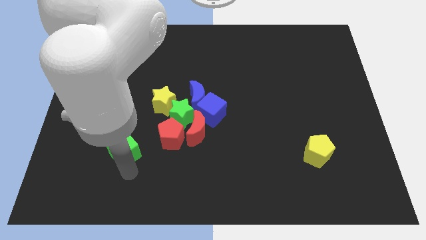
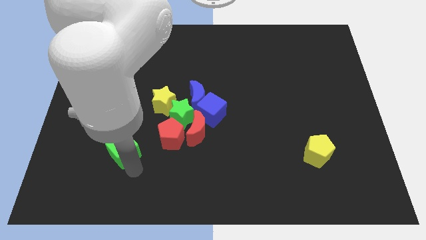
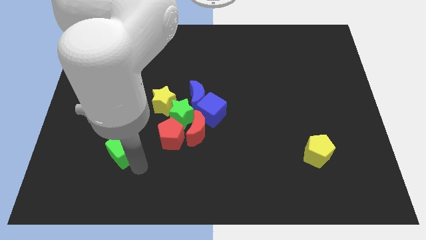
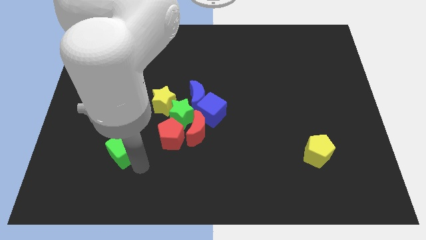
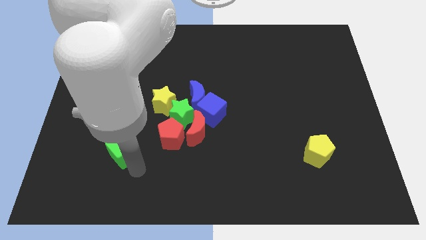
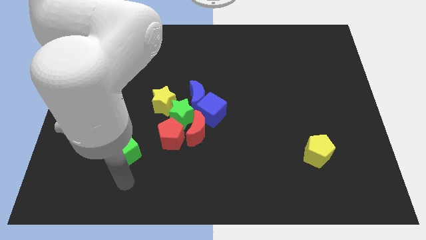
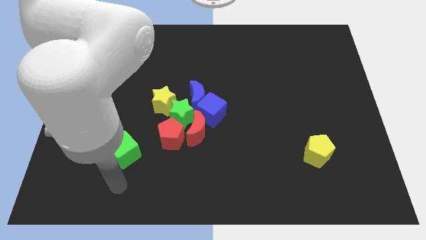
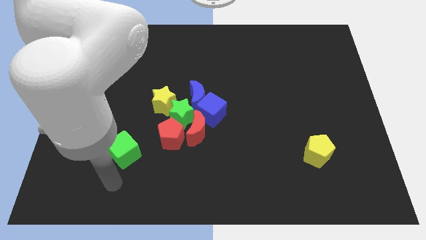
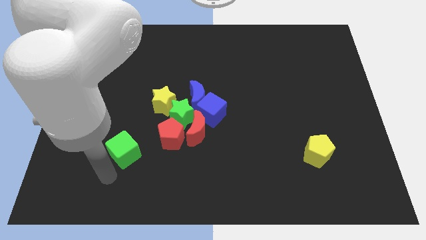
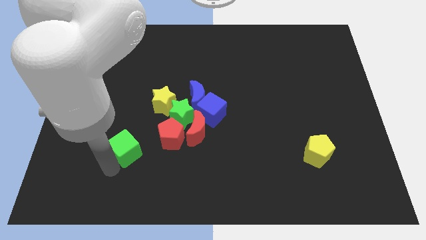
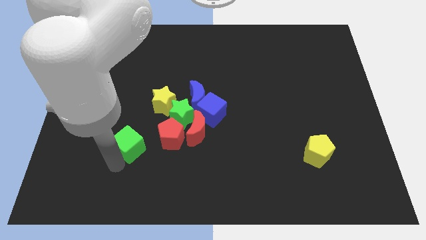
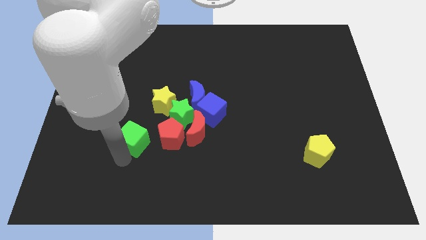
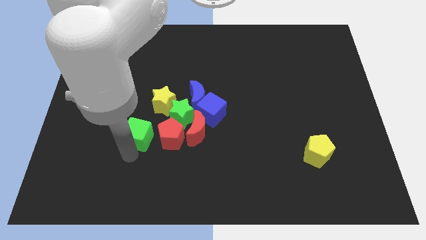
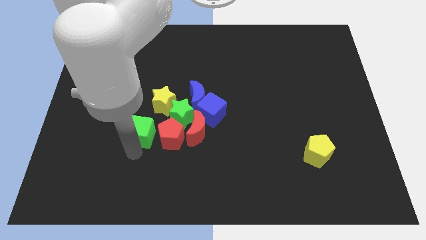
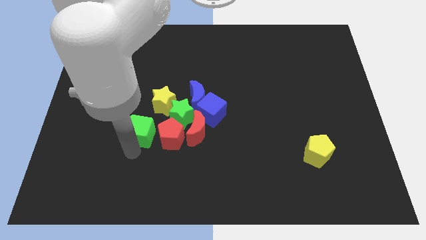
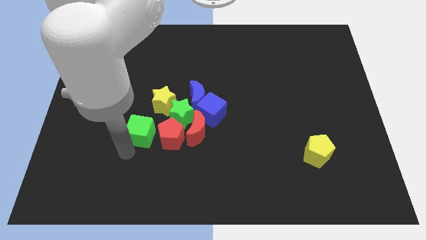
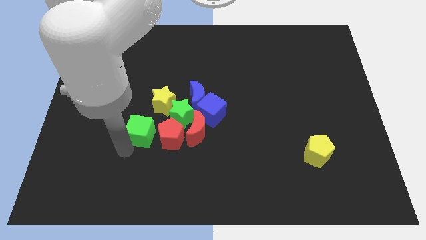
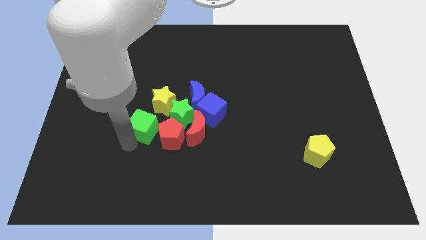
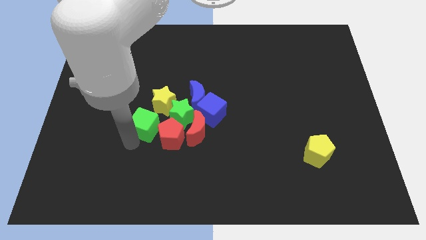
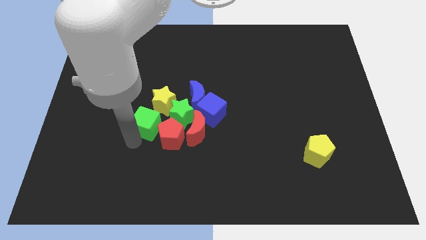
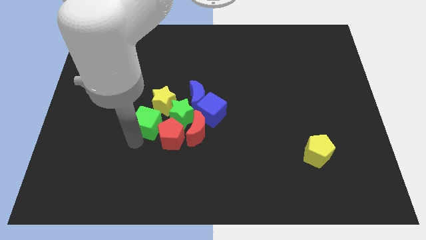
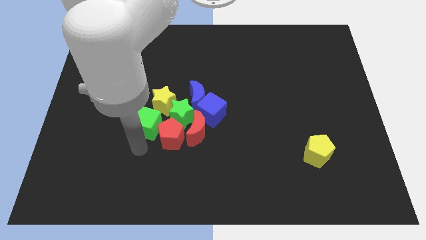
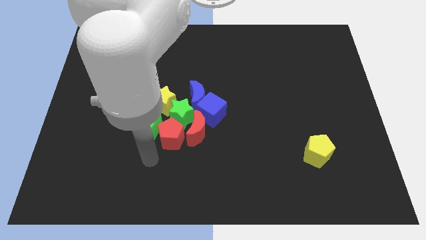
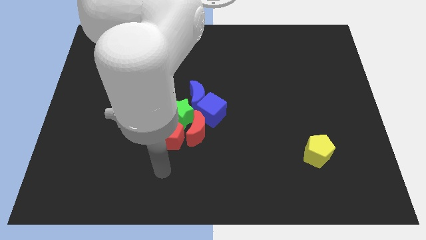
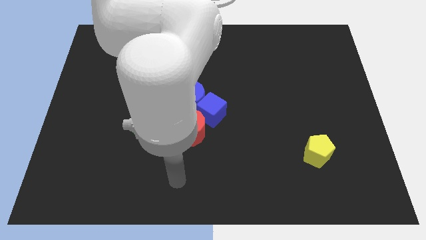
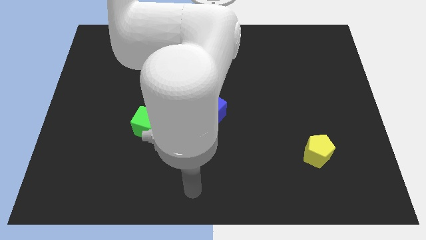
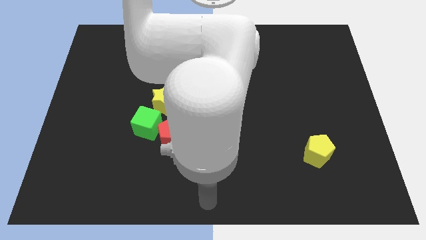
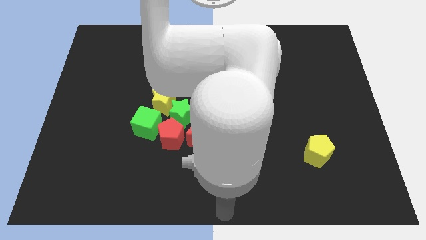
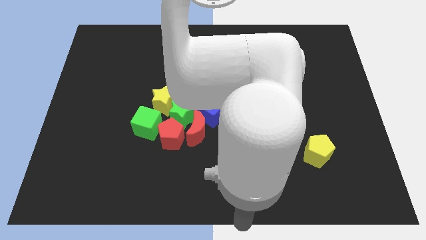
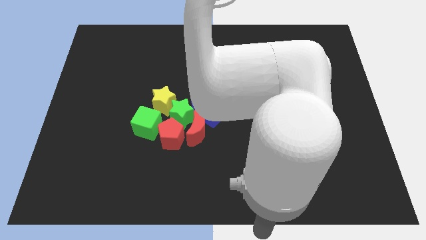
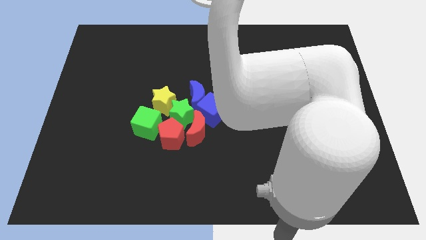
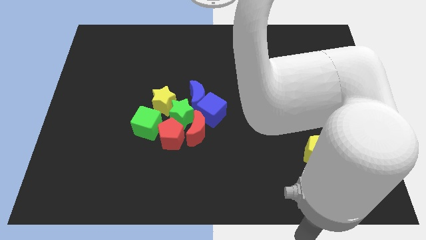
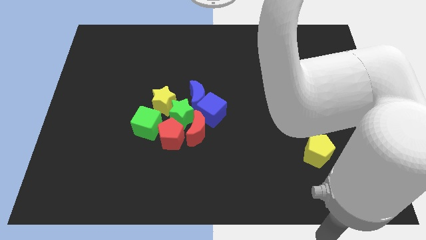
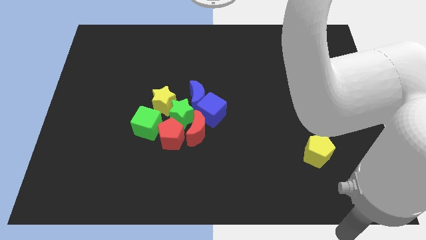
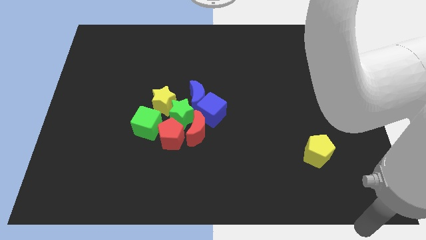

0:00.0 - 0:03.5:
push the green cube into the group of blocks

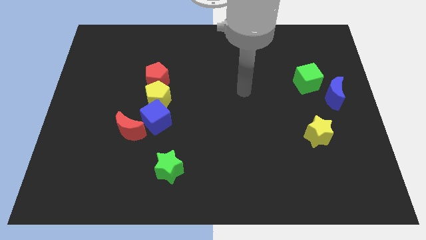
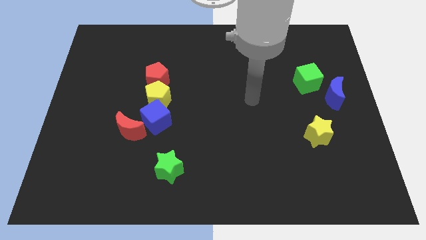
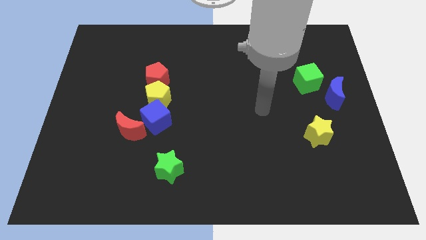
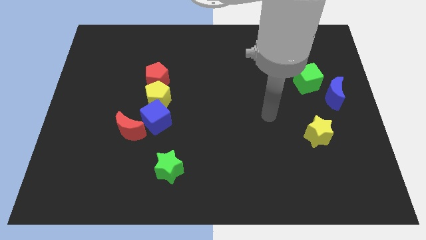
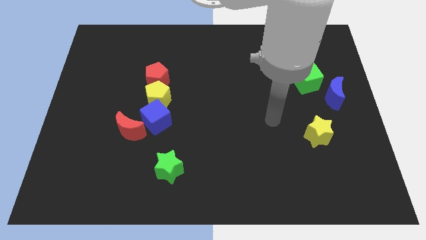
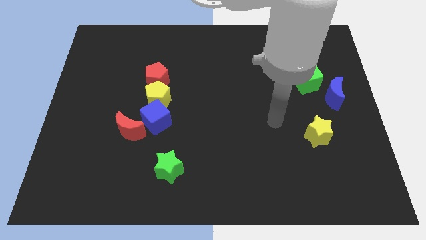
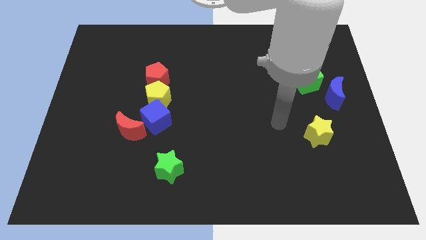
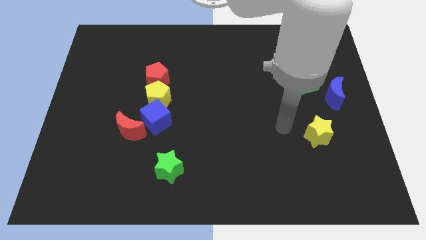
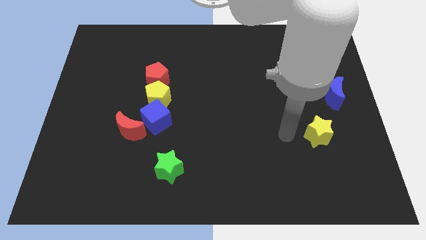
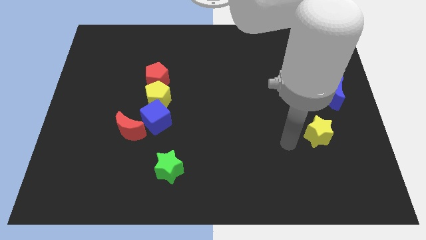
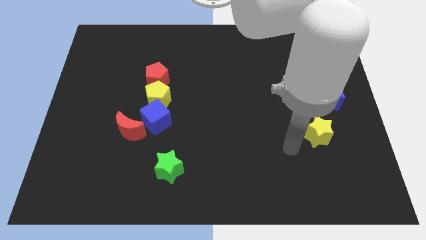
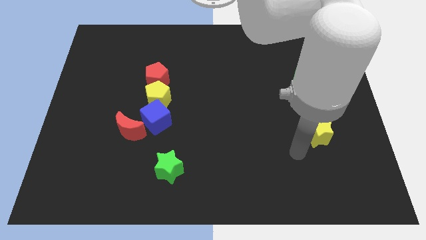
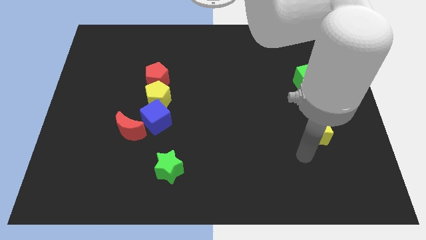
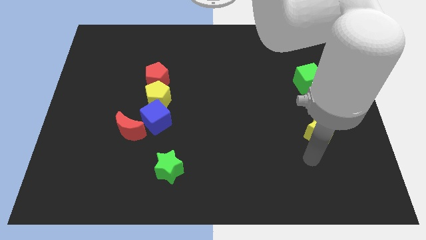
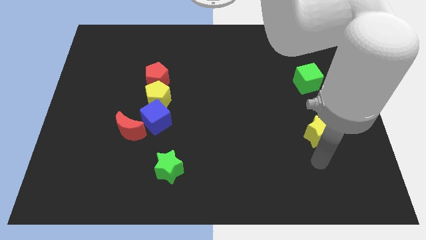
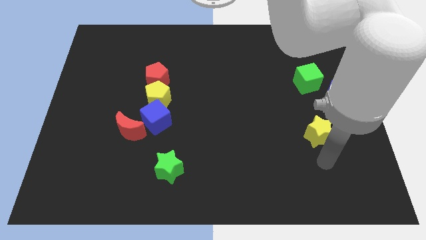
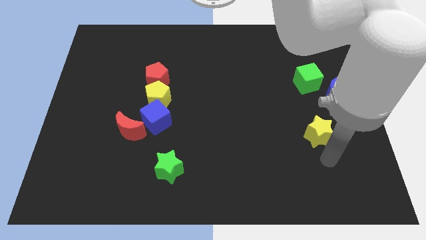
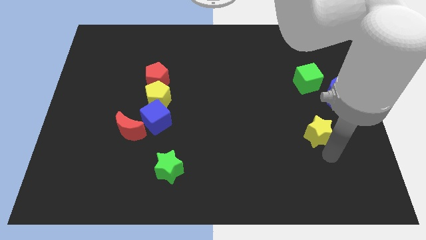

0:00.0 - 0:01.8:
slide your hand to the bottom of the yellow star

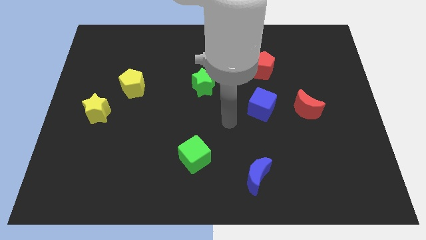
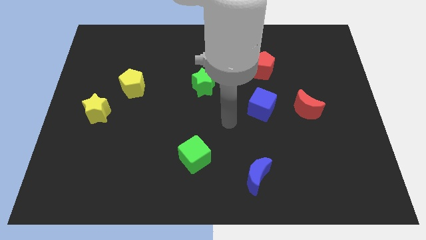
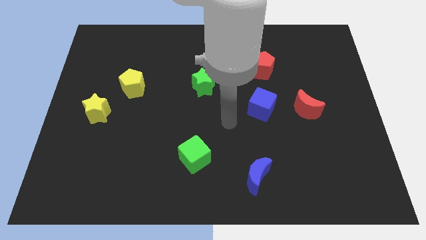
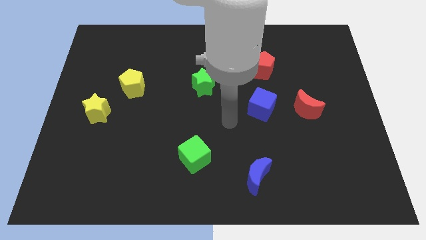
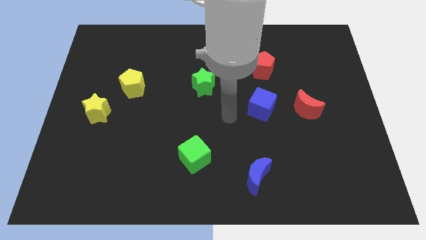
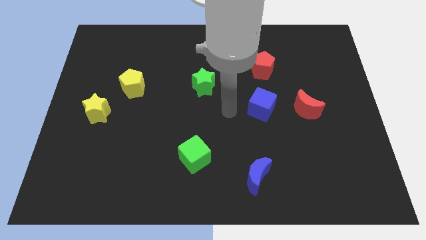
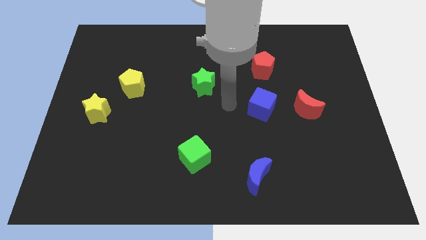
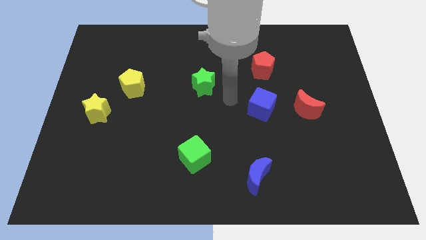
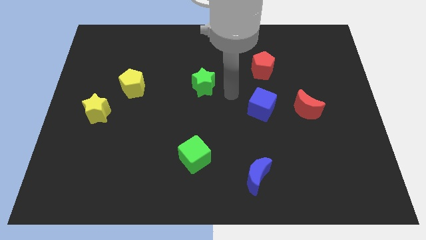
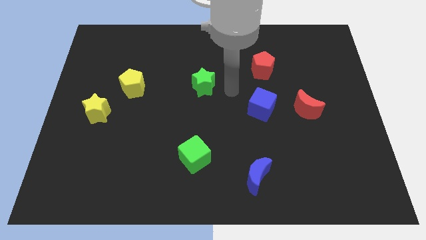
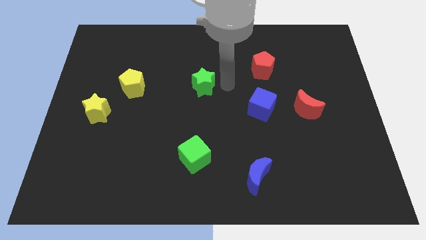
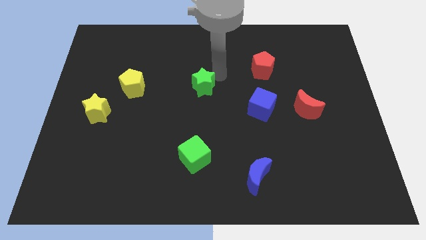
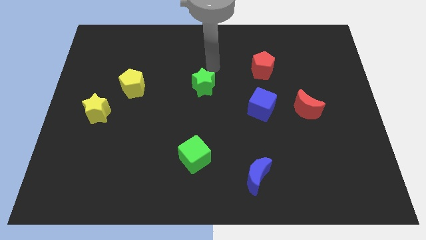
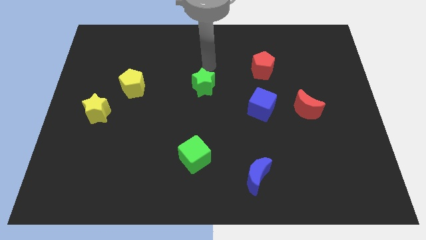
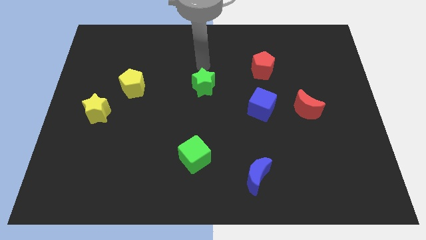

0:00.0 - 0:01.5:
place the arm above the green star

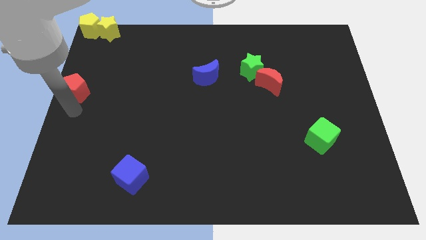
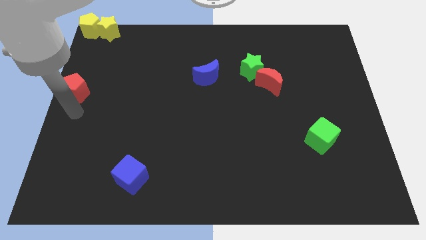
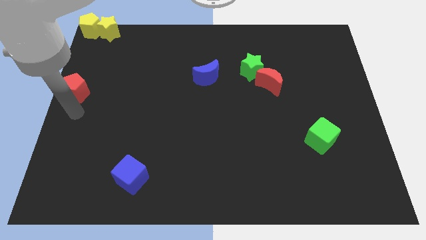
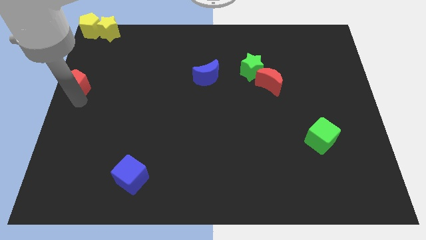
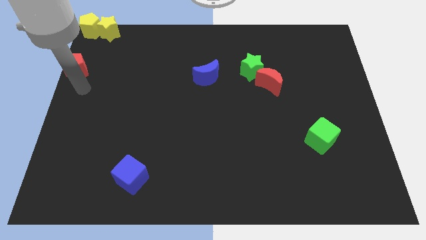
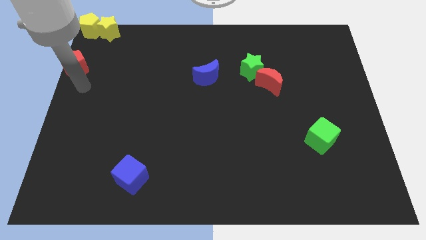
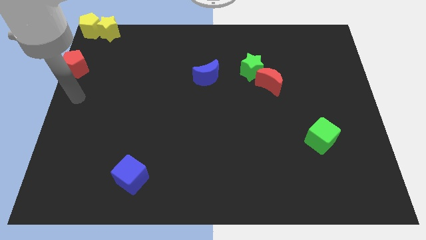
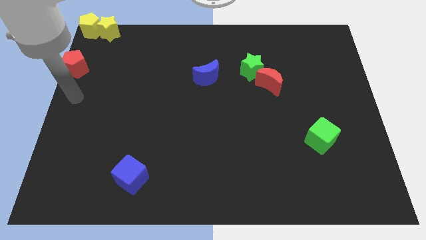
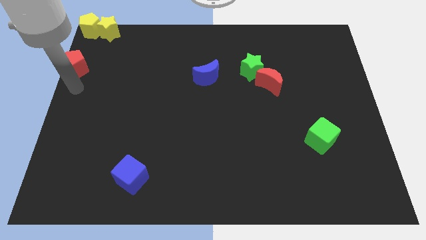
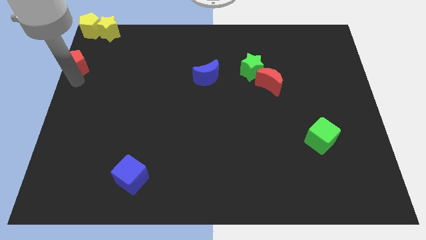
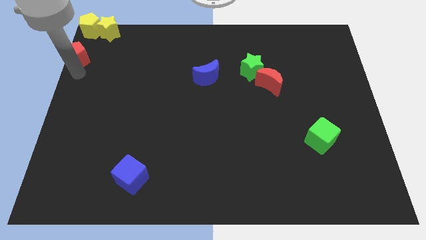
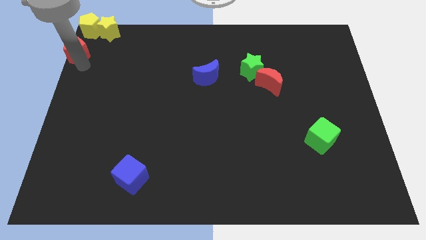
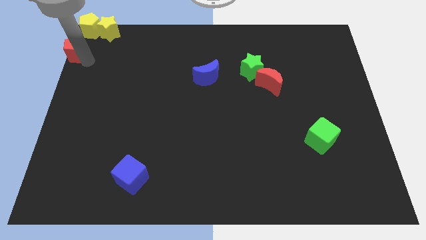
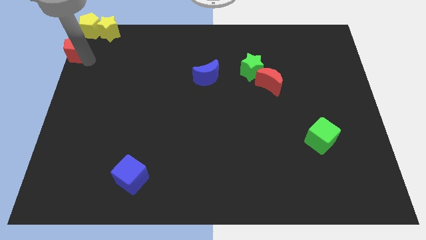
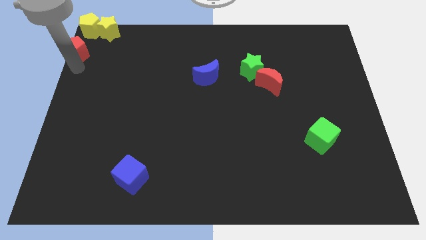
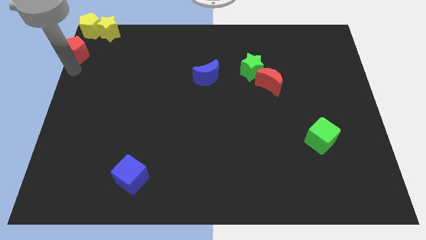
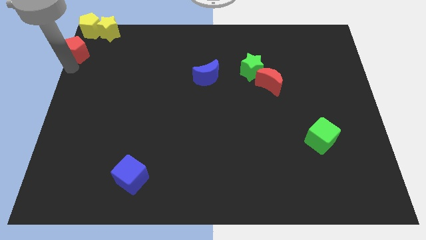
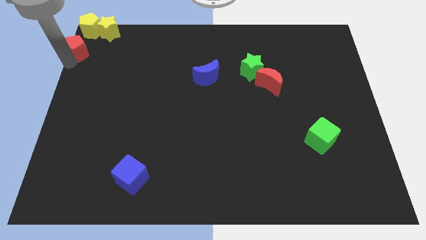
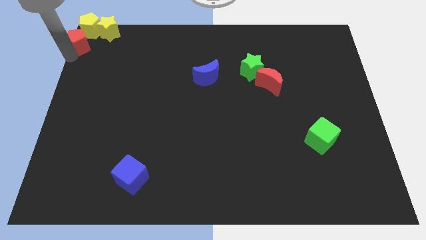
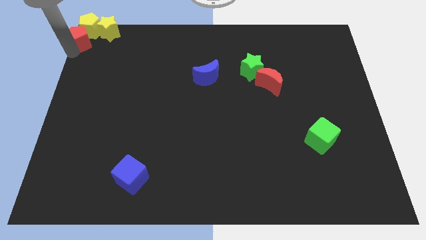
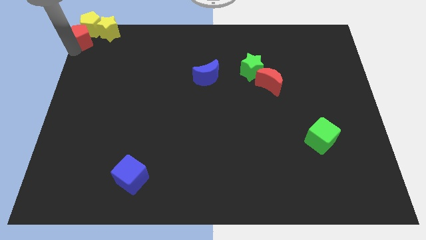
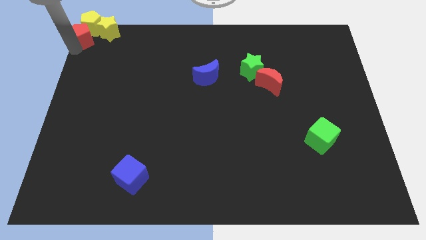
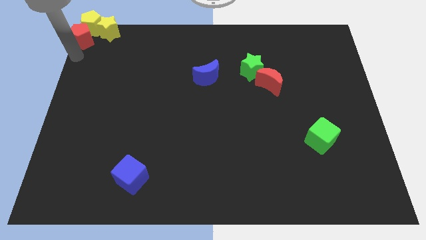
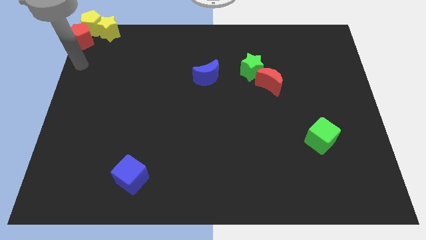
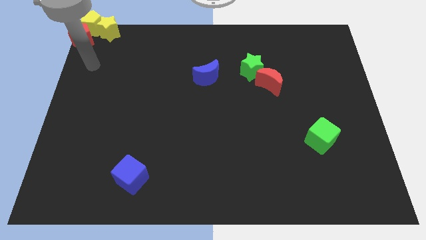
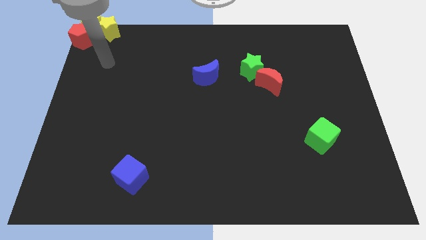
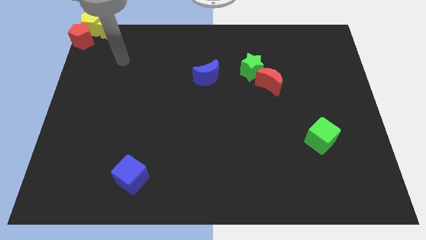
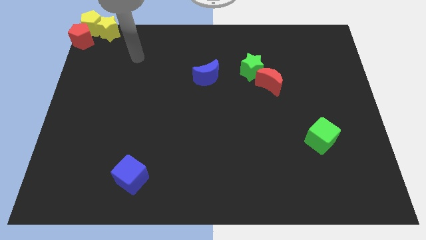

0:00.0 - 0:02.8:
move red pentagon to the top left corner of the board
